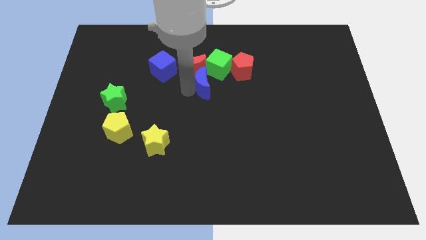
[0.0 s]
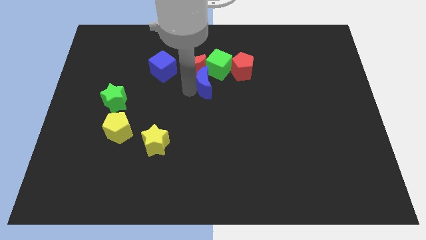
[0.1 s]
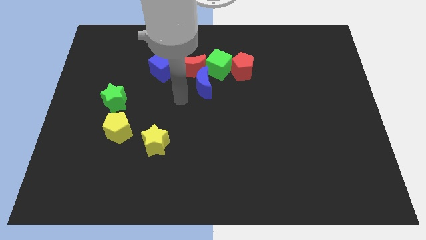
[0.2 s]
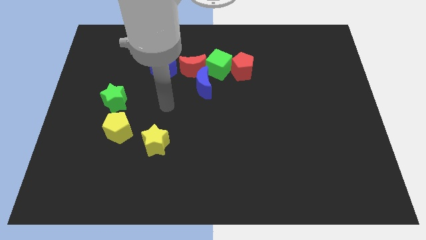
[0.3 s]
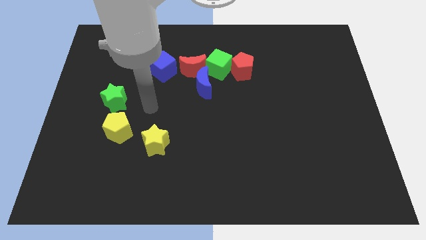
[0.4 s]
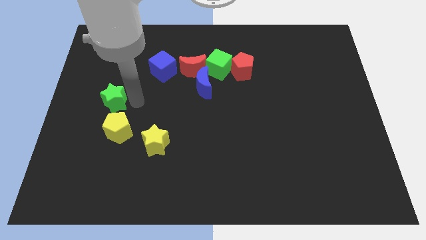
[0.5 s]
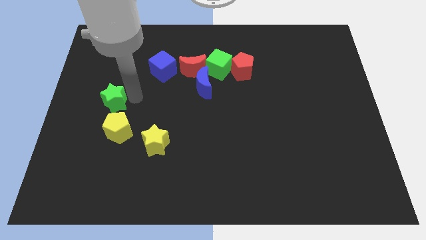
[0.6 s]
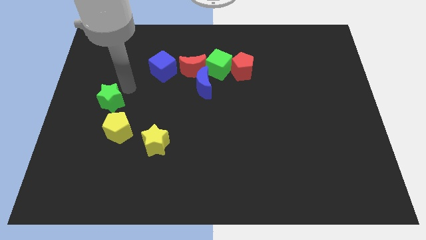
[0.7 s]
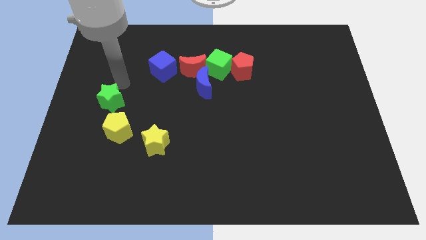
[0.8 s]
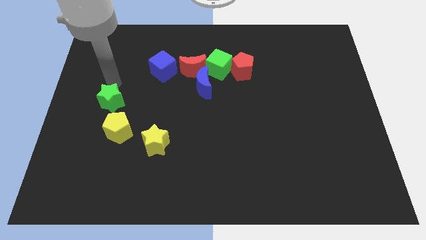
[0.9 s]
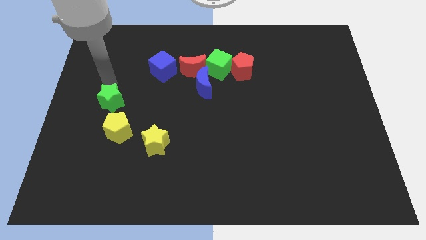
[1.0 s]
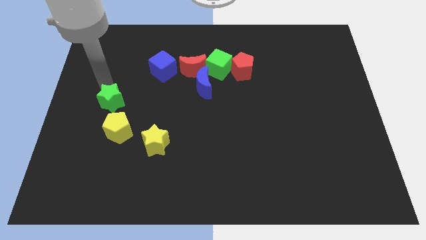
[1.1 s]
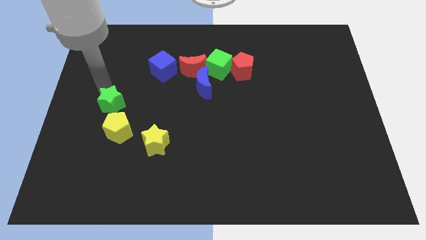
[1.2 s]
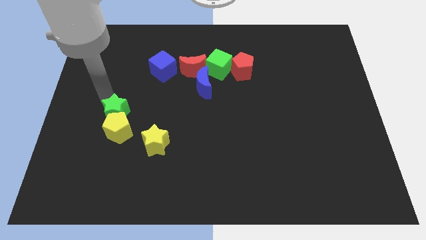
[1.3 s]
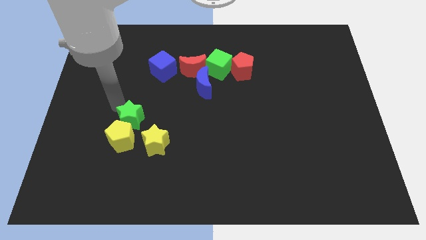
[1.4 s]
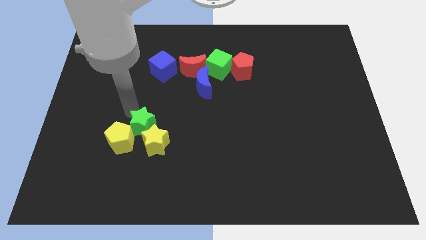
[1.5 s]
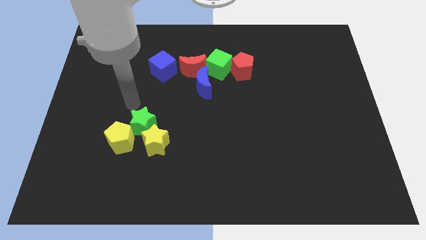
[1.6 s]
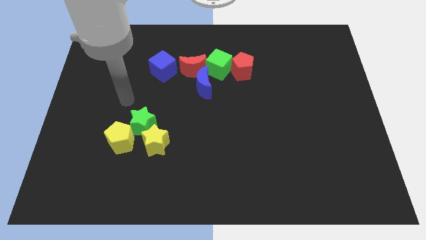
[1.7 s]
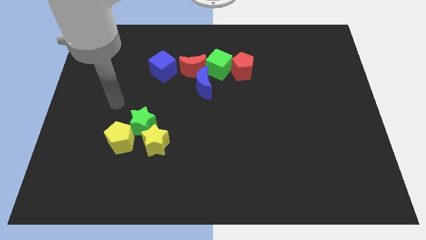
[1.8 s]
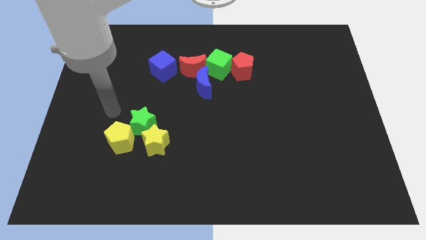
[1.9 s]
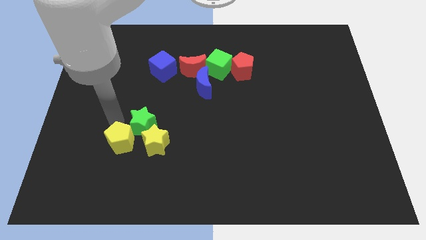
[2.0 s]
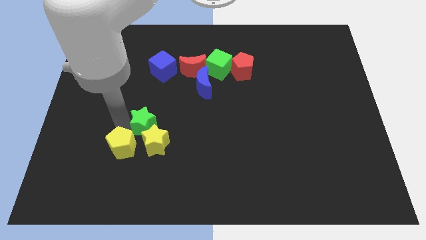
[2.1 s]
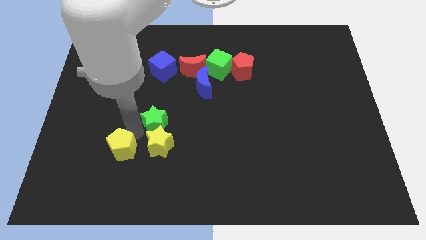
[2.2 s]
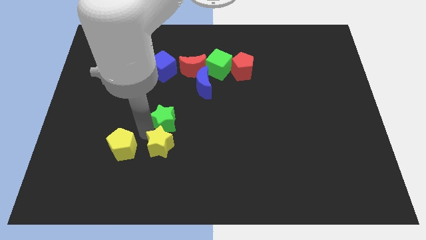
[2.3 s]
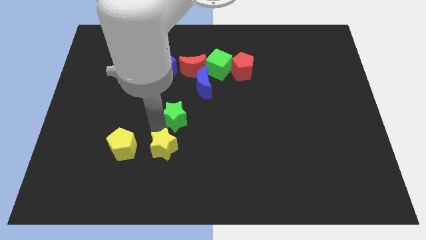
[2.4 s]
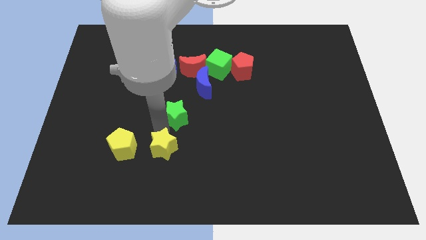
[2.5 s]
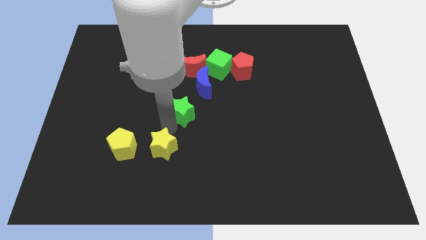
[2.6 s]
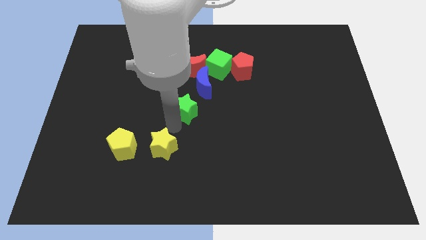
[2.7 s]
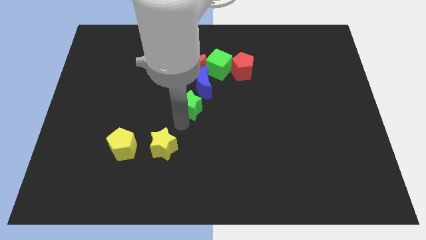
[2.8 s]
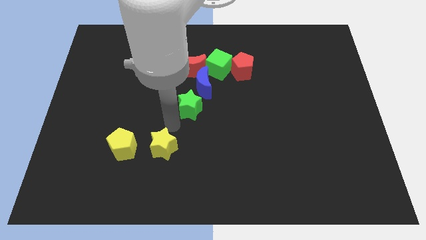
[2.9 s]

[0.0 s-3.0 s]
push the green star into the yellow pentagon

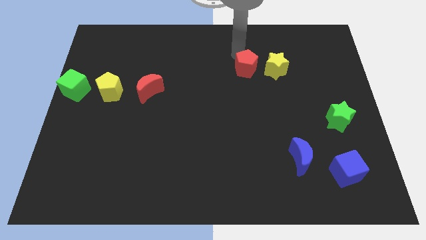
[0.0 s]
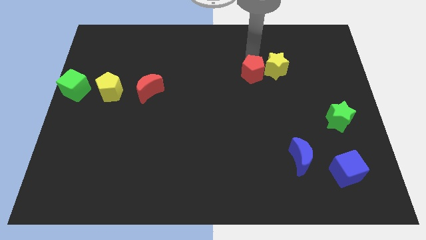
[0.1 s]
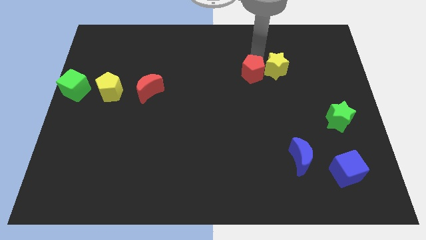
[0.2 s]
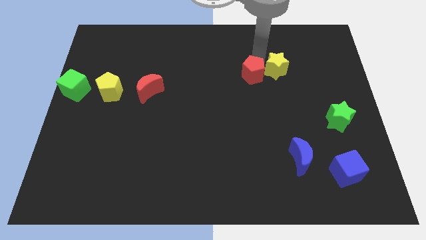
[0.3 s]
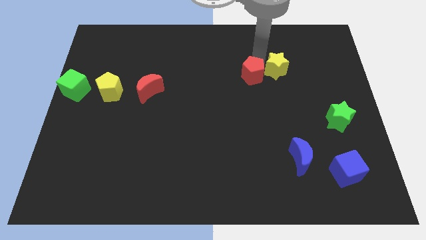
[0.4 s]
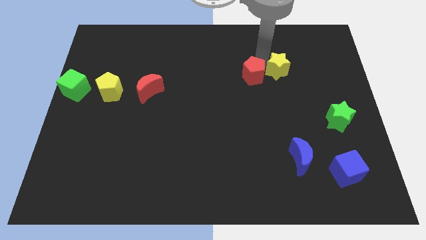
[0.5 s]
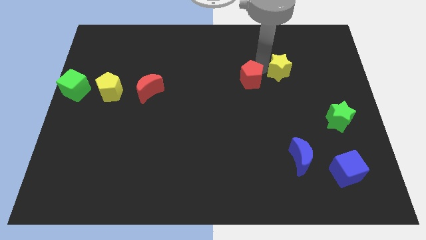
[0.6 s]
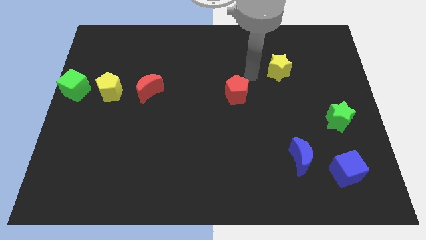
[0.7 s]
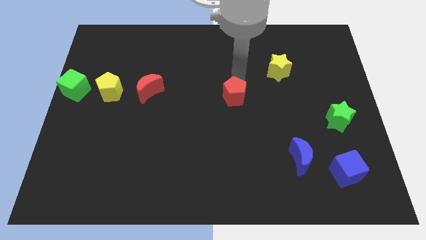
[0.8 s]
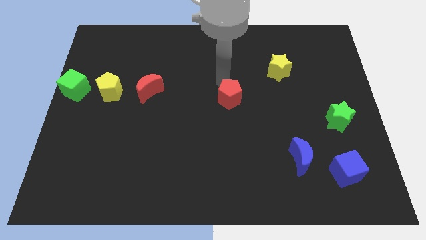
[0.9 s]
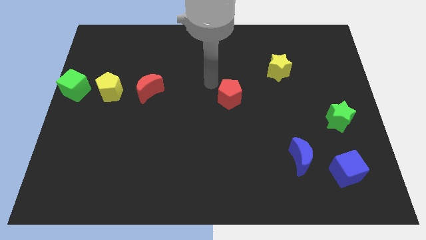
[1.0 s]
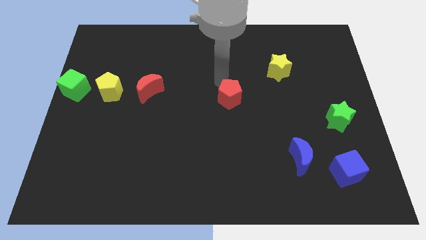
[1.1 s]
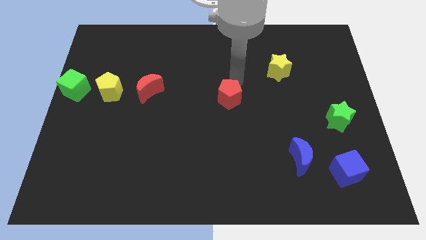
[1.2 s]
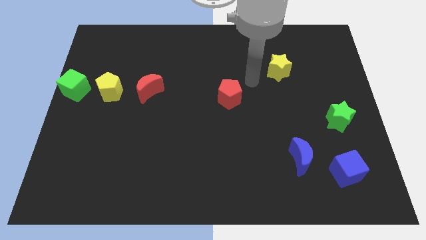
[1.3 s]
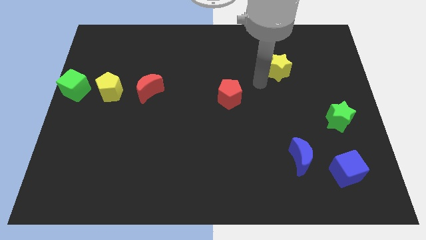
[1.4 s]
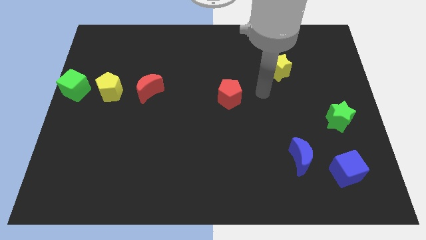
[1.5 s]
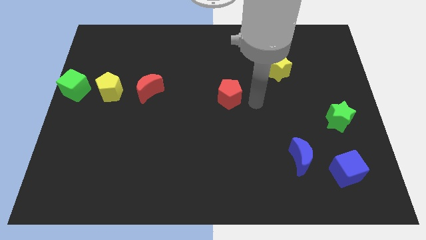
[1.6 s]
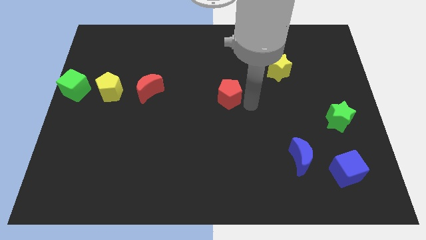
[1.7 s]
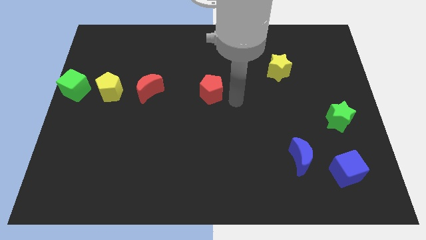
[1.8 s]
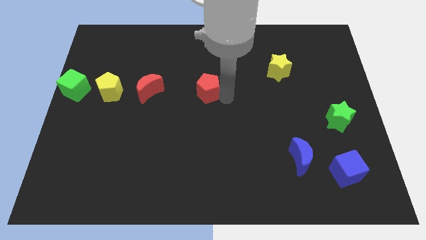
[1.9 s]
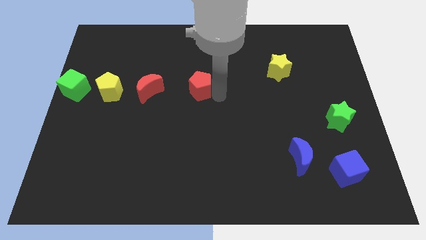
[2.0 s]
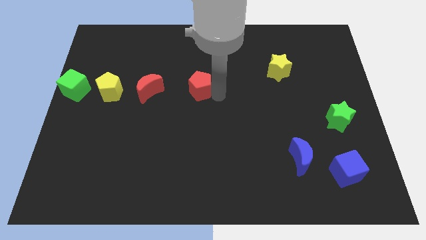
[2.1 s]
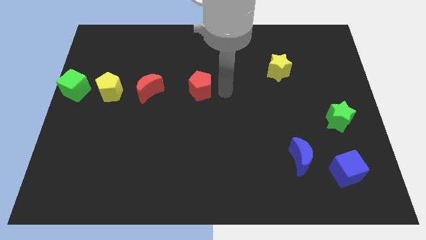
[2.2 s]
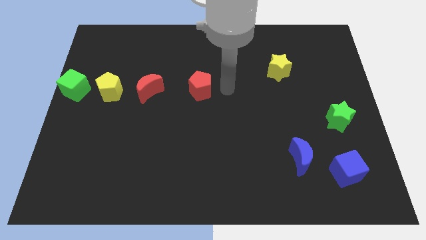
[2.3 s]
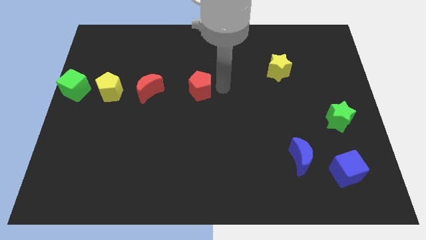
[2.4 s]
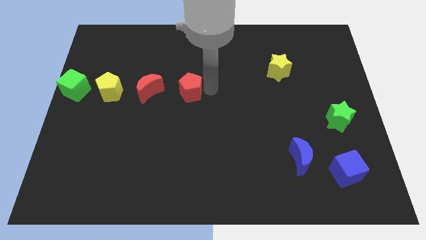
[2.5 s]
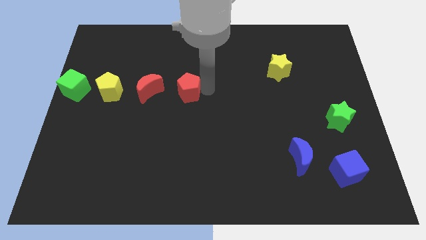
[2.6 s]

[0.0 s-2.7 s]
push the red pentagon to the right of the red moon

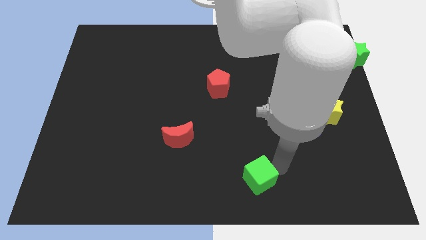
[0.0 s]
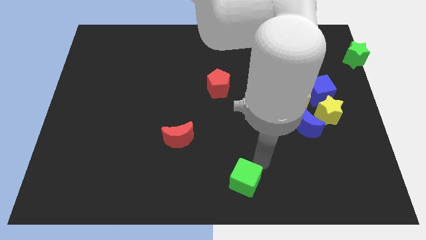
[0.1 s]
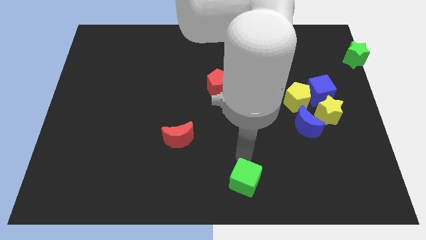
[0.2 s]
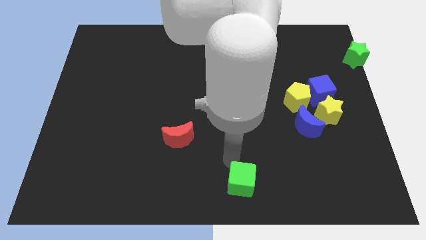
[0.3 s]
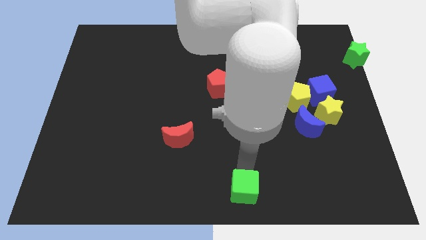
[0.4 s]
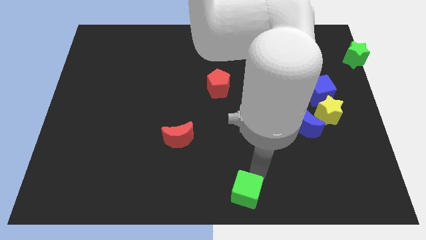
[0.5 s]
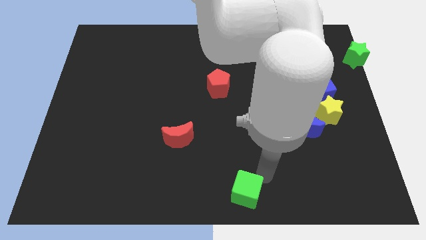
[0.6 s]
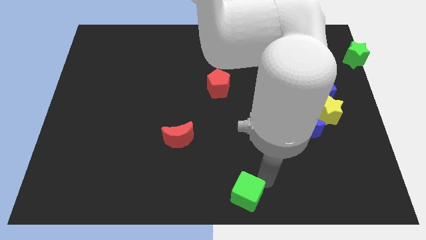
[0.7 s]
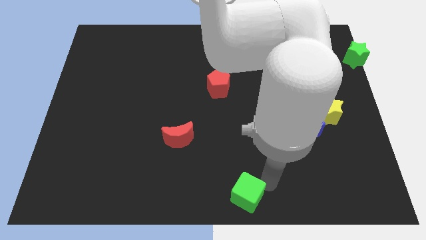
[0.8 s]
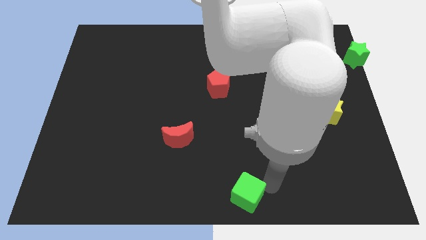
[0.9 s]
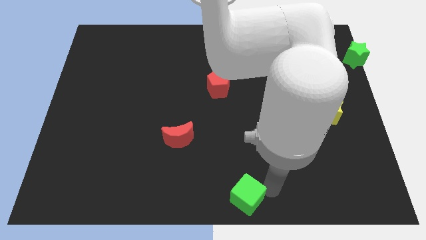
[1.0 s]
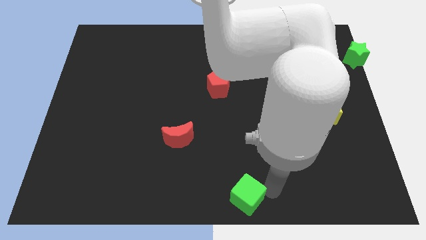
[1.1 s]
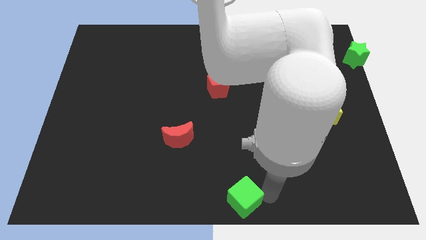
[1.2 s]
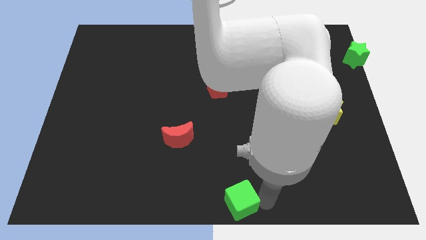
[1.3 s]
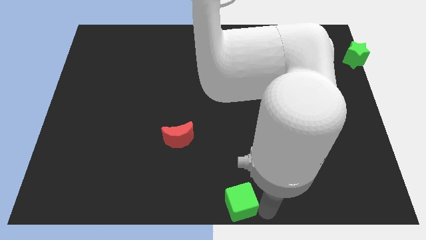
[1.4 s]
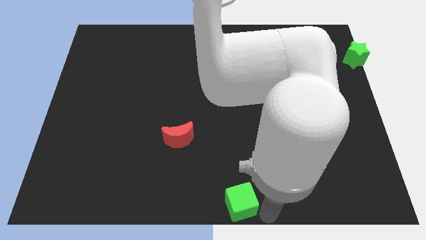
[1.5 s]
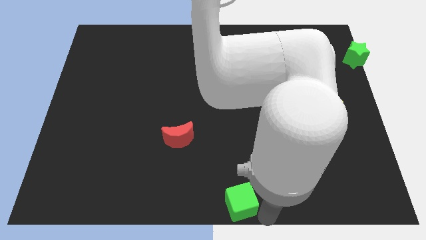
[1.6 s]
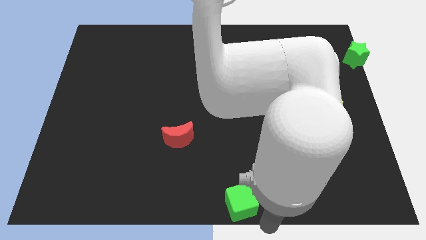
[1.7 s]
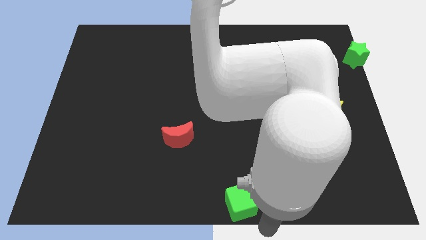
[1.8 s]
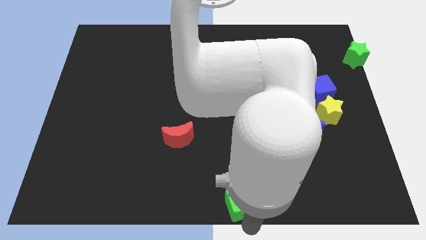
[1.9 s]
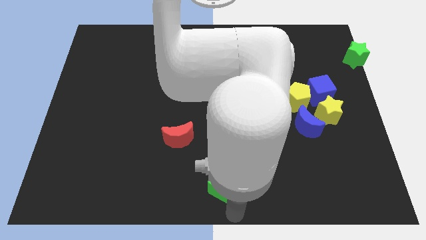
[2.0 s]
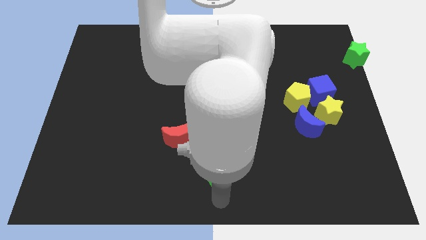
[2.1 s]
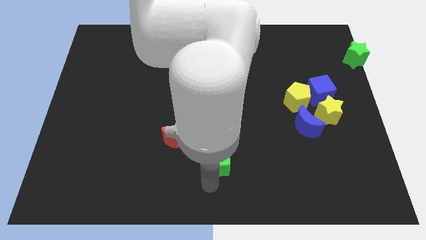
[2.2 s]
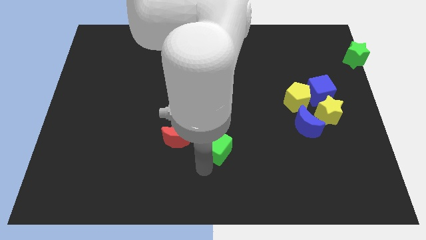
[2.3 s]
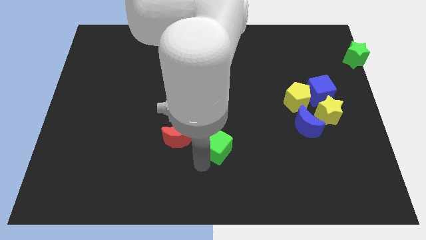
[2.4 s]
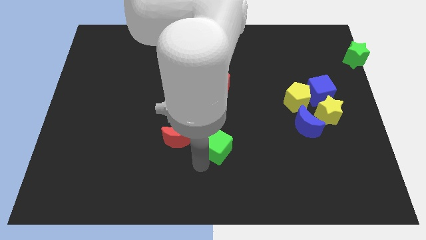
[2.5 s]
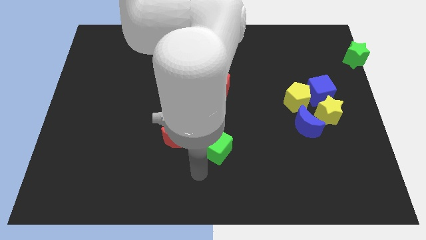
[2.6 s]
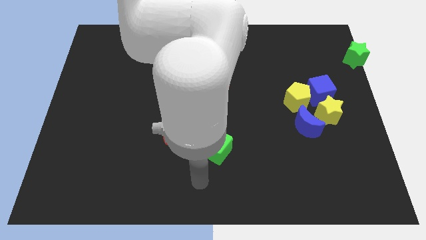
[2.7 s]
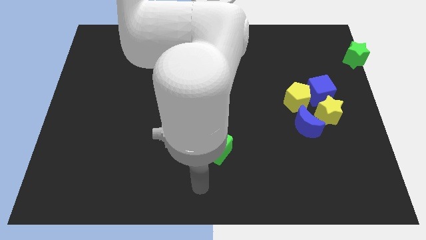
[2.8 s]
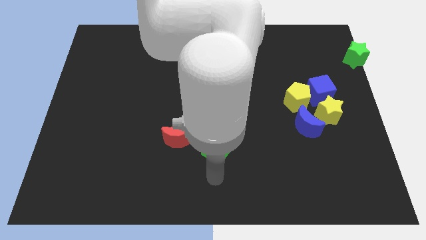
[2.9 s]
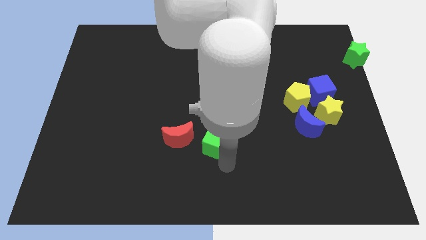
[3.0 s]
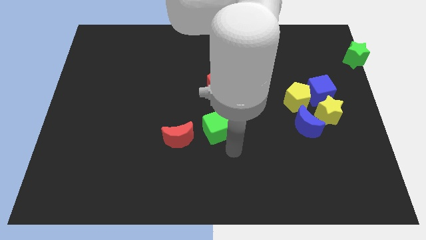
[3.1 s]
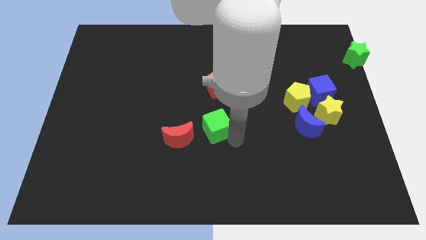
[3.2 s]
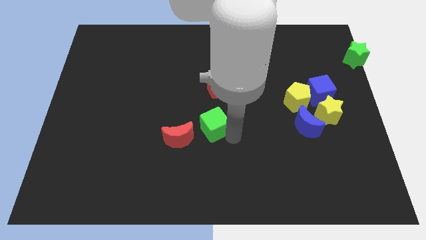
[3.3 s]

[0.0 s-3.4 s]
push the green cube upward
